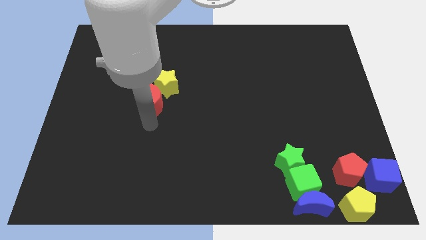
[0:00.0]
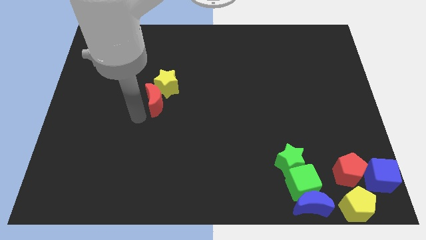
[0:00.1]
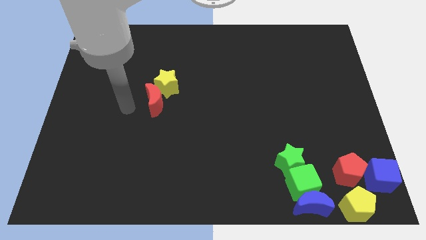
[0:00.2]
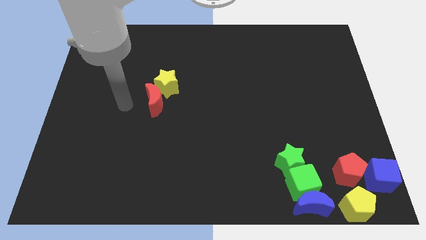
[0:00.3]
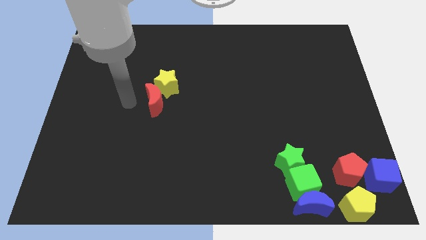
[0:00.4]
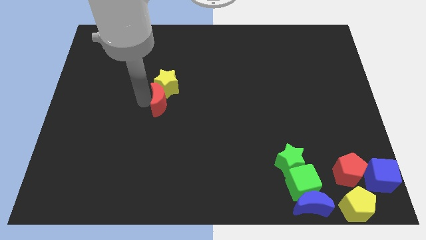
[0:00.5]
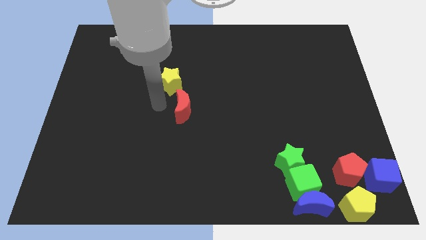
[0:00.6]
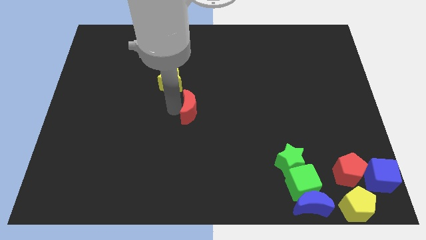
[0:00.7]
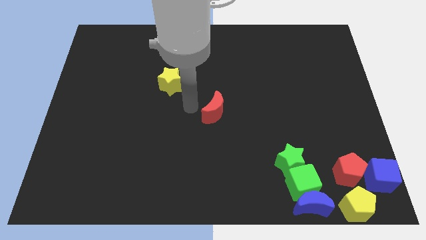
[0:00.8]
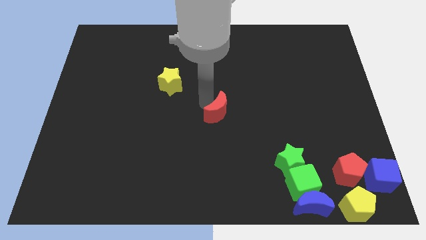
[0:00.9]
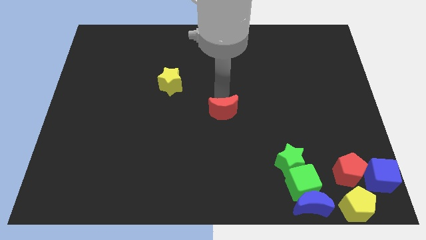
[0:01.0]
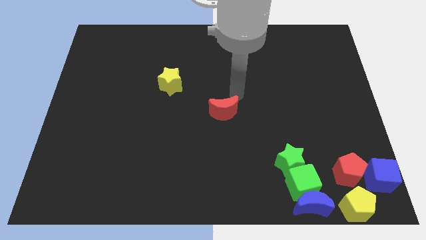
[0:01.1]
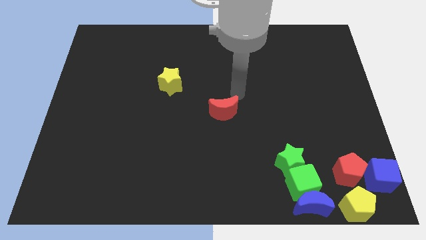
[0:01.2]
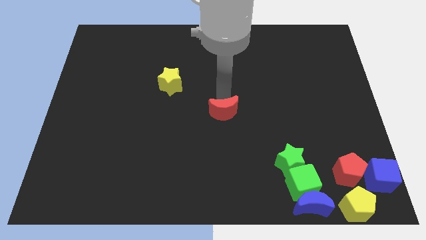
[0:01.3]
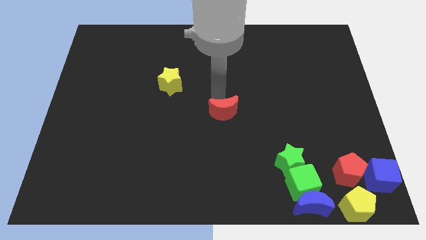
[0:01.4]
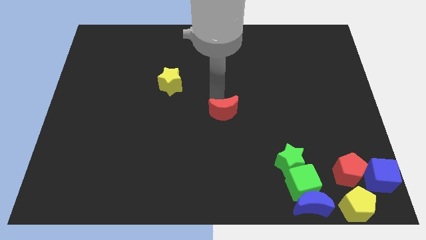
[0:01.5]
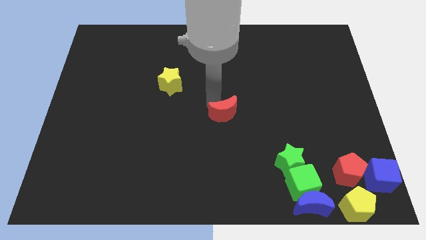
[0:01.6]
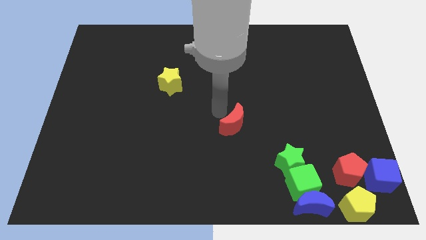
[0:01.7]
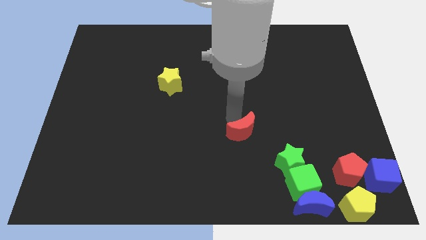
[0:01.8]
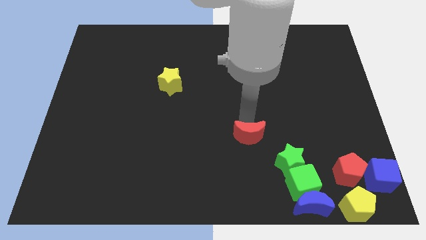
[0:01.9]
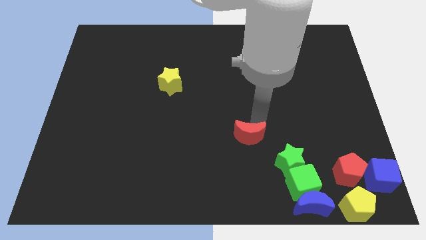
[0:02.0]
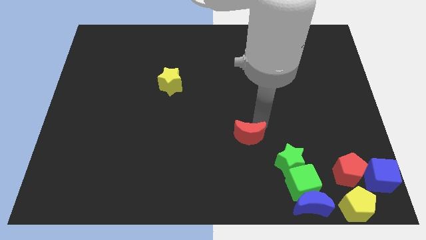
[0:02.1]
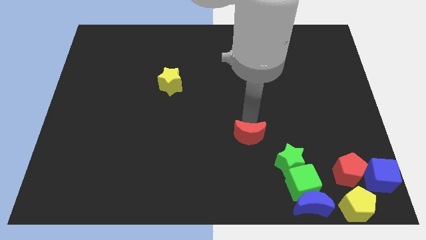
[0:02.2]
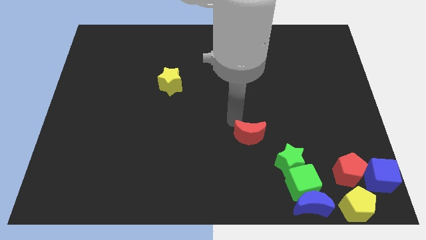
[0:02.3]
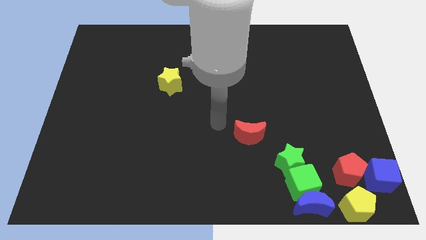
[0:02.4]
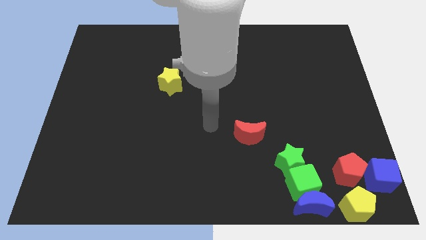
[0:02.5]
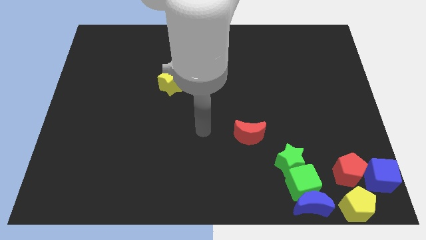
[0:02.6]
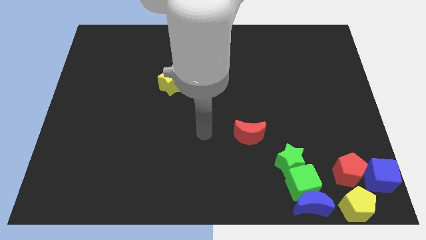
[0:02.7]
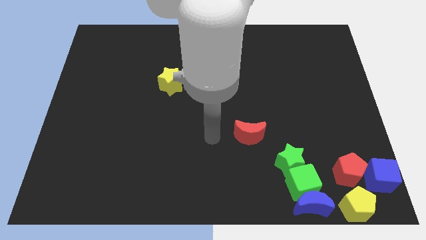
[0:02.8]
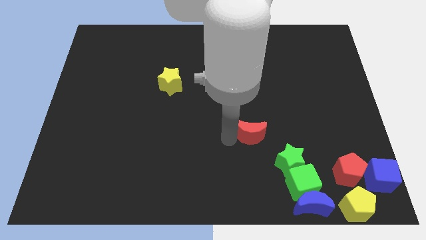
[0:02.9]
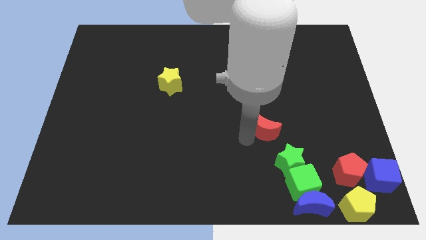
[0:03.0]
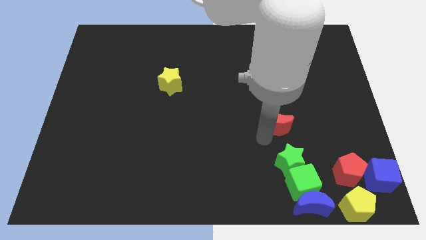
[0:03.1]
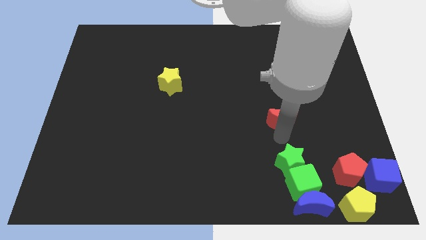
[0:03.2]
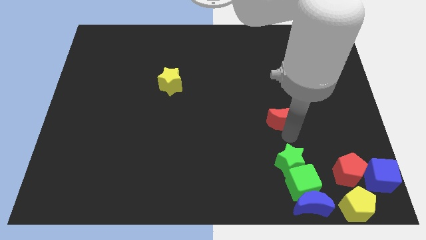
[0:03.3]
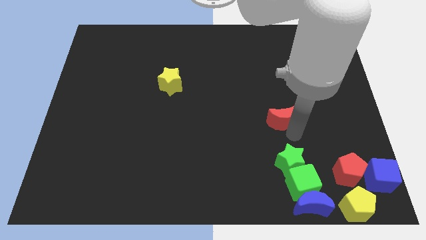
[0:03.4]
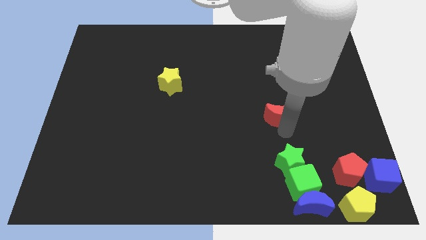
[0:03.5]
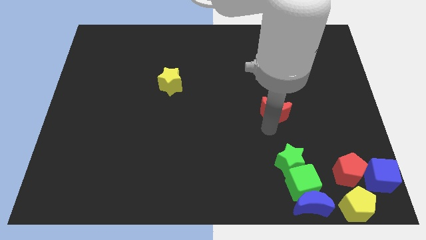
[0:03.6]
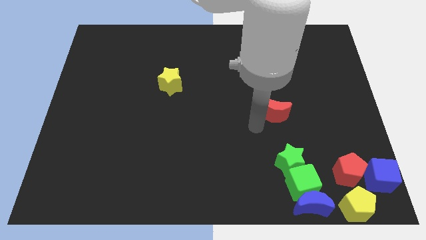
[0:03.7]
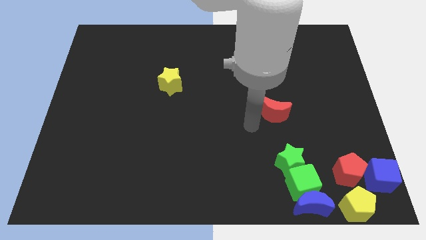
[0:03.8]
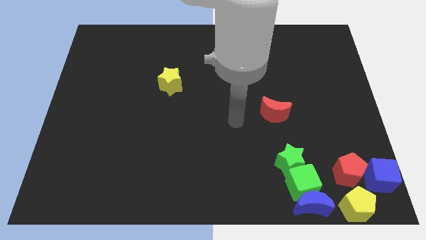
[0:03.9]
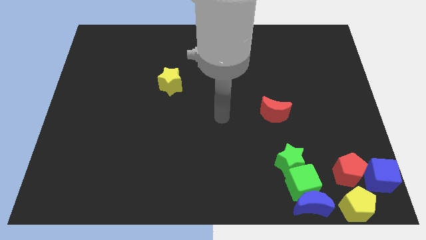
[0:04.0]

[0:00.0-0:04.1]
move the red moon to the vertical top of the green star

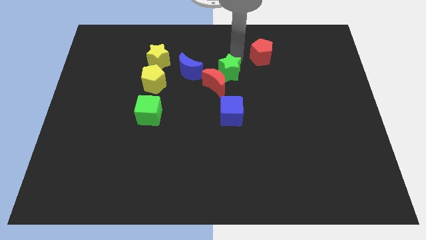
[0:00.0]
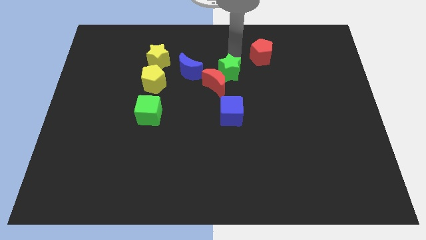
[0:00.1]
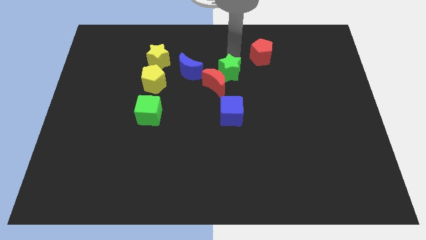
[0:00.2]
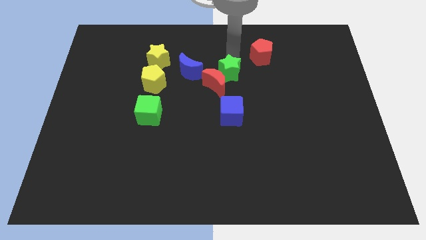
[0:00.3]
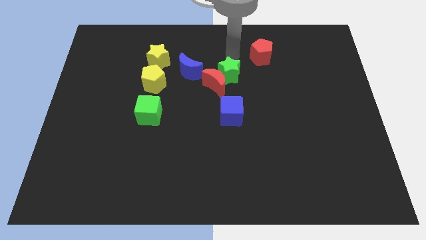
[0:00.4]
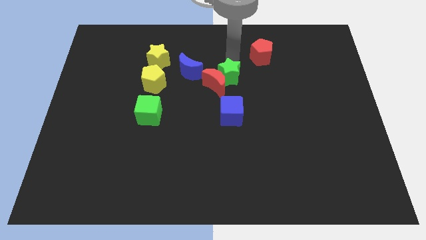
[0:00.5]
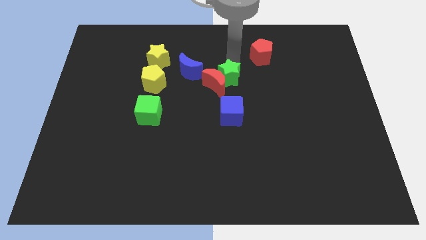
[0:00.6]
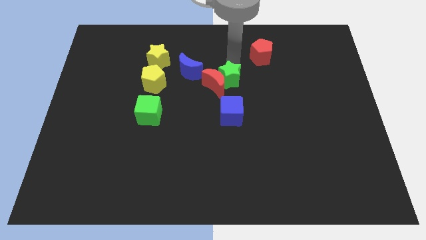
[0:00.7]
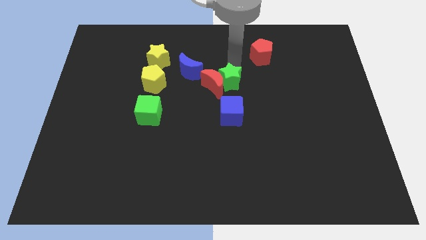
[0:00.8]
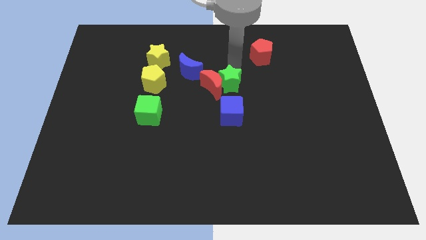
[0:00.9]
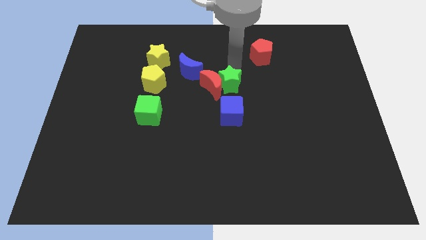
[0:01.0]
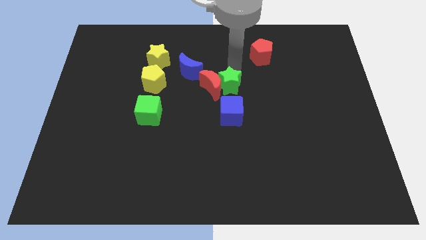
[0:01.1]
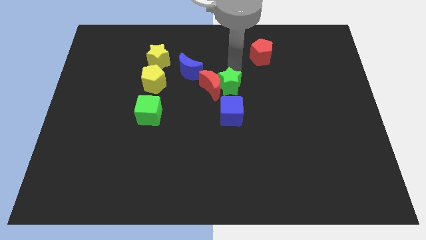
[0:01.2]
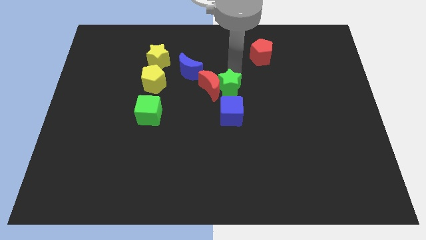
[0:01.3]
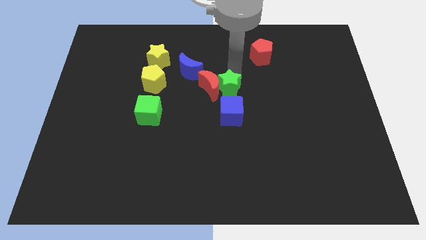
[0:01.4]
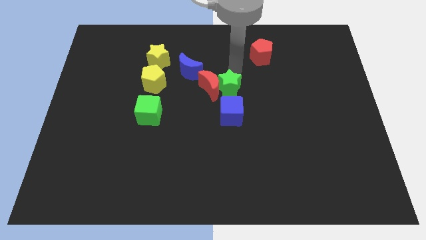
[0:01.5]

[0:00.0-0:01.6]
move green star into red crescent

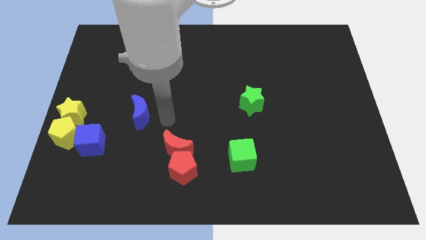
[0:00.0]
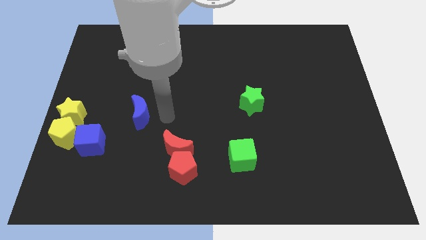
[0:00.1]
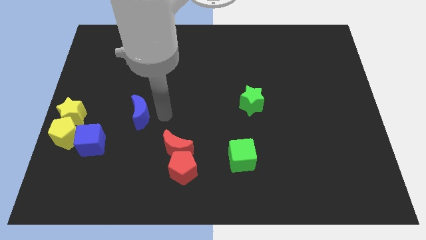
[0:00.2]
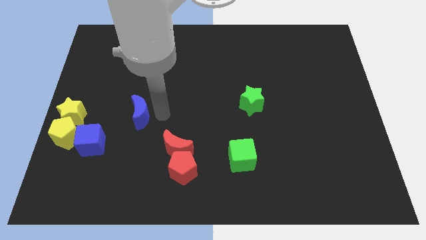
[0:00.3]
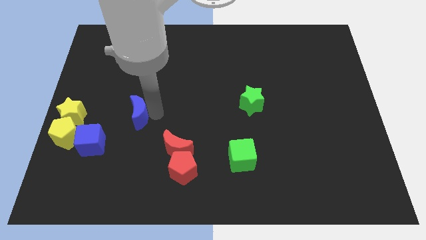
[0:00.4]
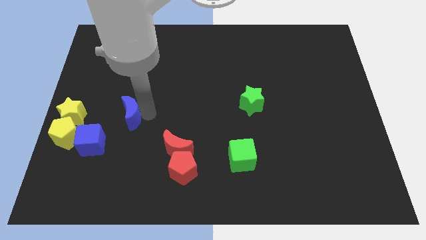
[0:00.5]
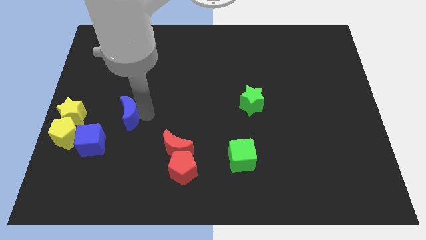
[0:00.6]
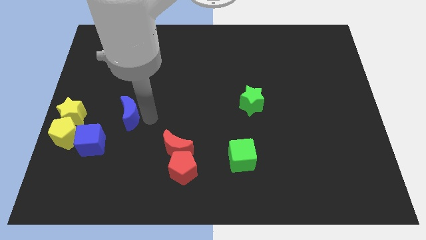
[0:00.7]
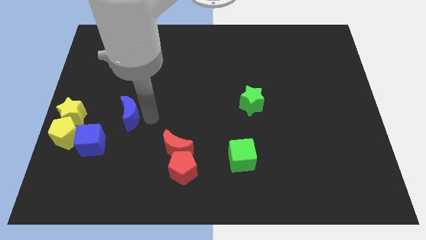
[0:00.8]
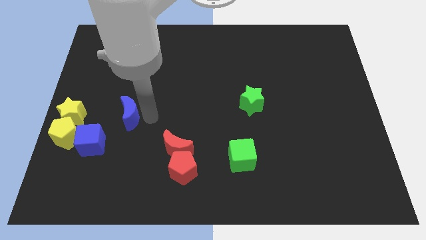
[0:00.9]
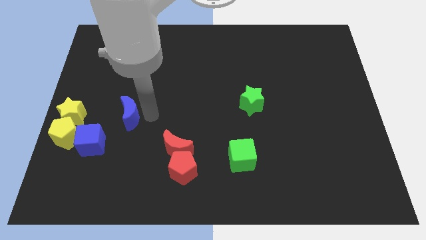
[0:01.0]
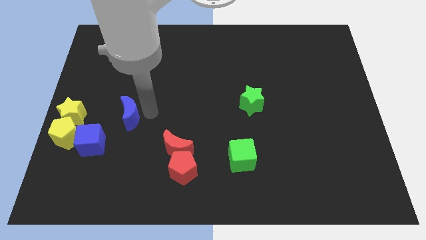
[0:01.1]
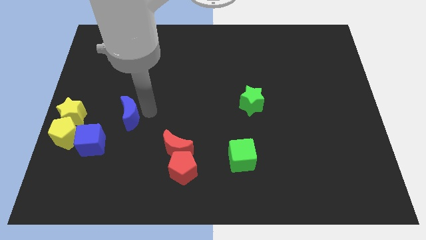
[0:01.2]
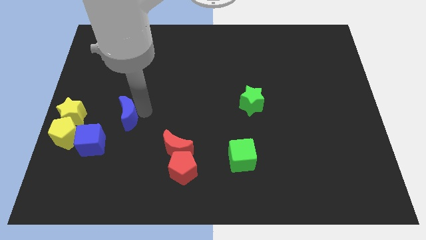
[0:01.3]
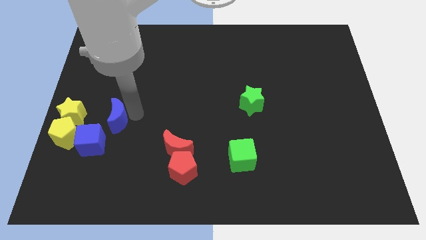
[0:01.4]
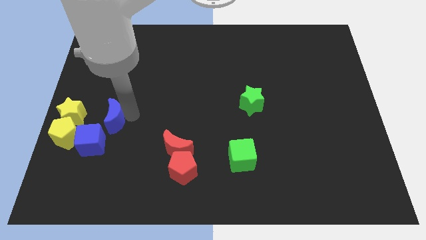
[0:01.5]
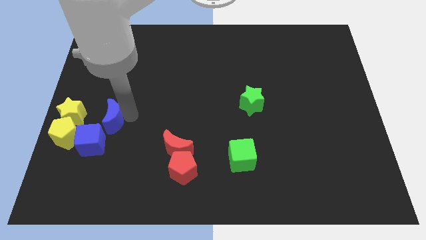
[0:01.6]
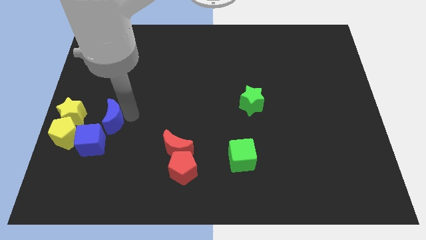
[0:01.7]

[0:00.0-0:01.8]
push the blue crescent at the top right side of blue cube

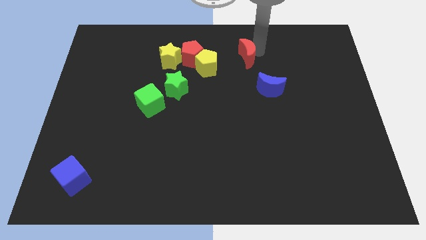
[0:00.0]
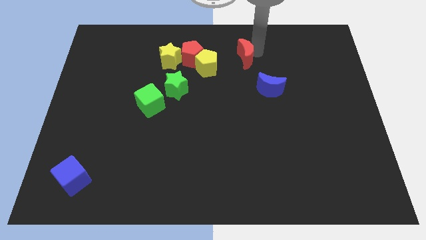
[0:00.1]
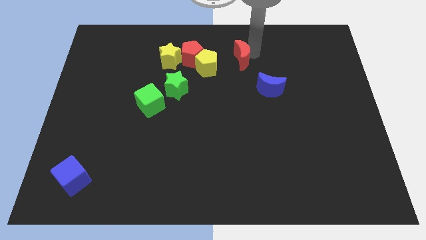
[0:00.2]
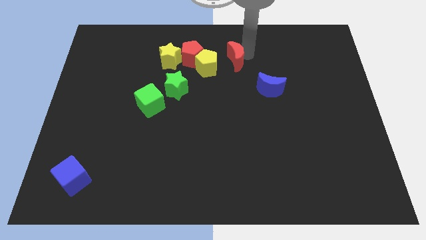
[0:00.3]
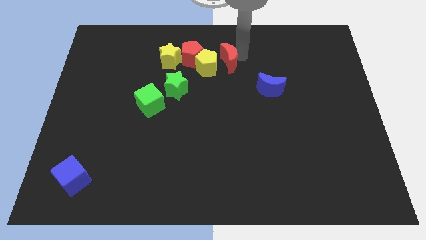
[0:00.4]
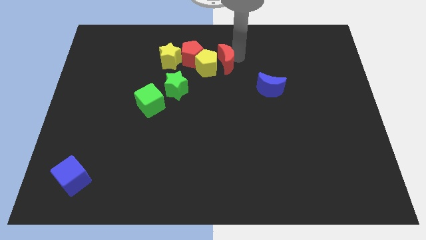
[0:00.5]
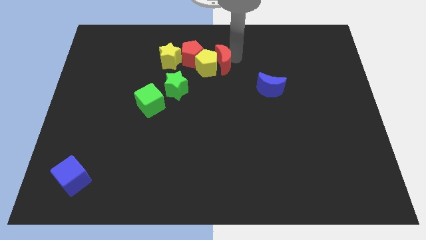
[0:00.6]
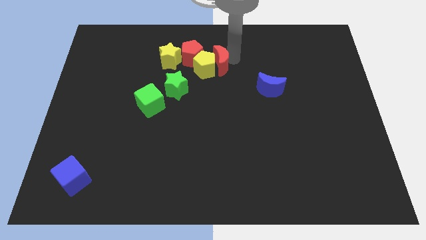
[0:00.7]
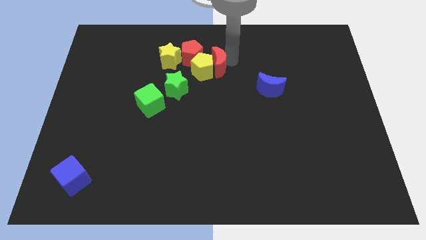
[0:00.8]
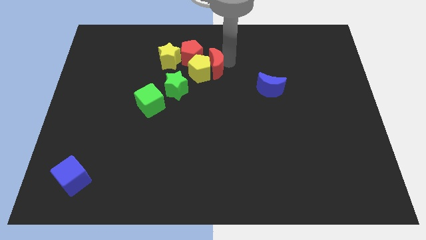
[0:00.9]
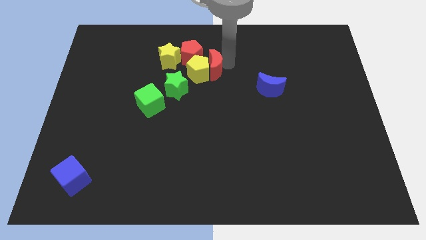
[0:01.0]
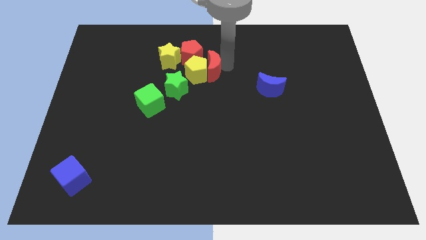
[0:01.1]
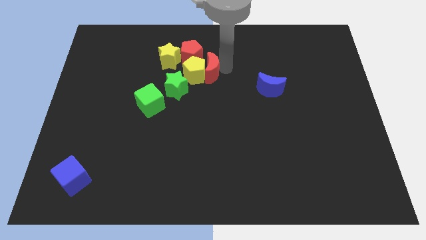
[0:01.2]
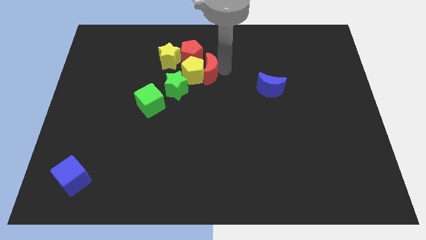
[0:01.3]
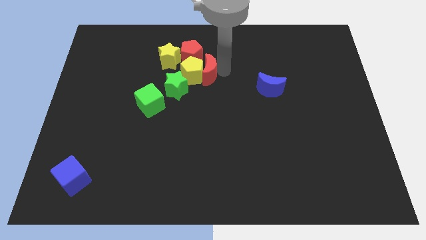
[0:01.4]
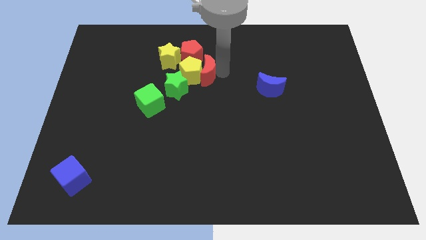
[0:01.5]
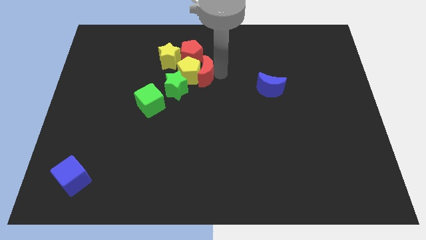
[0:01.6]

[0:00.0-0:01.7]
slide the red moon into the yellow pentagon

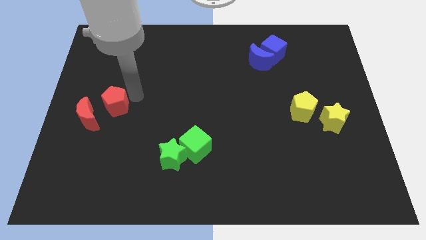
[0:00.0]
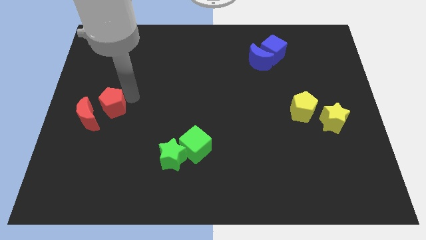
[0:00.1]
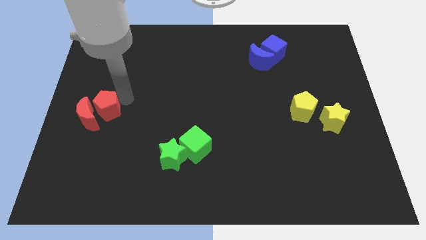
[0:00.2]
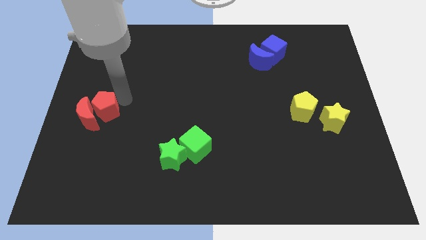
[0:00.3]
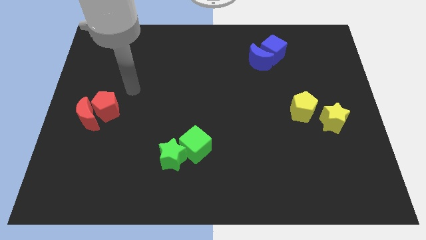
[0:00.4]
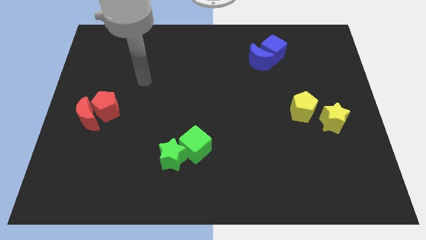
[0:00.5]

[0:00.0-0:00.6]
push the red pentagon into the red crescent
